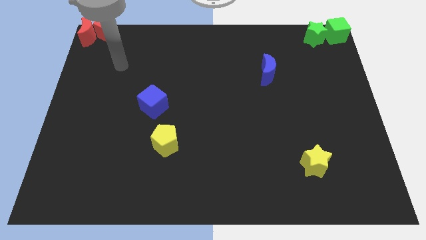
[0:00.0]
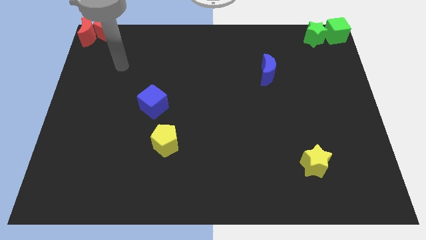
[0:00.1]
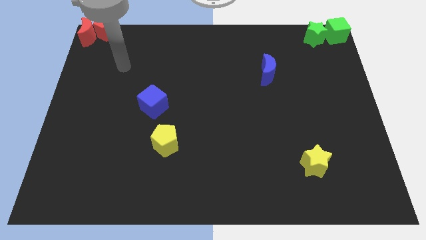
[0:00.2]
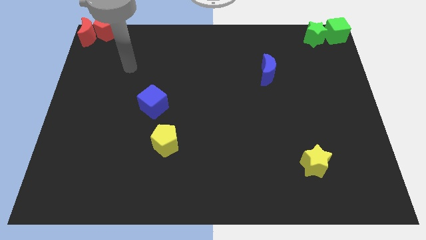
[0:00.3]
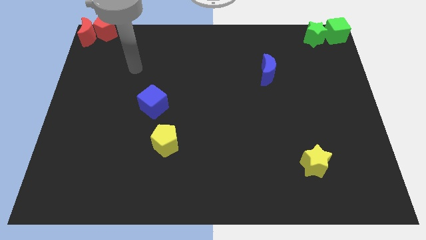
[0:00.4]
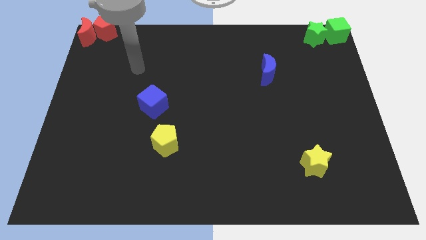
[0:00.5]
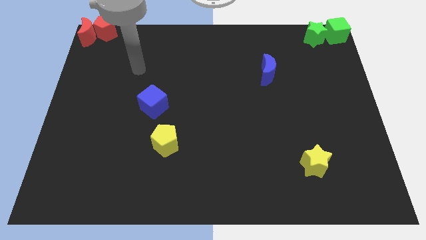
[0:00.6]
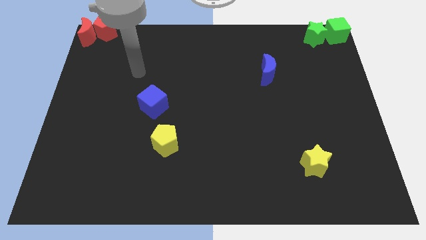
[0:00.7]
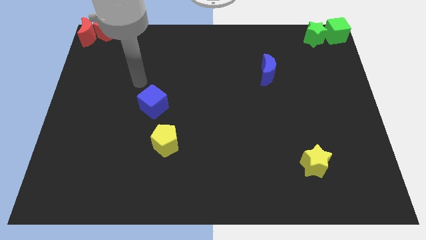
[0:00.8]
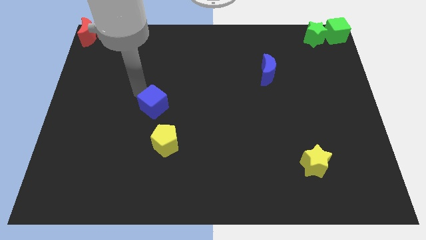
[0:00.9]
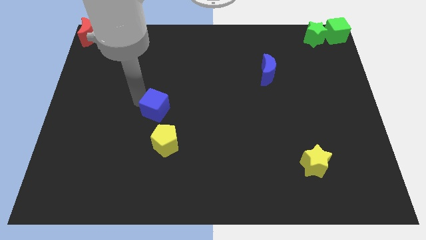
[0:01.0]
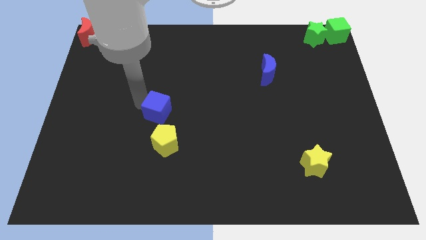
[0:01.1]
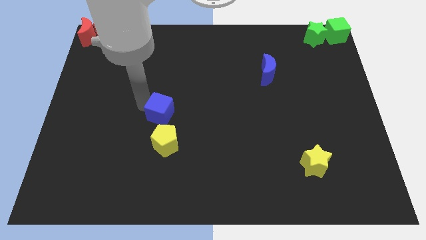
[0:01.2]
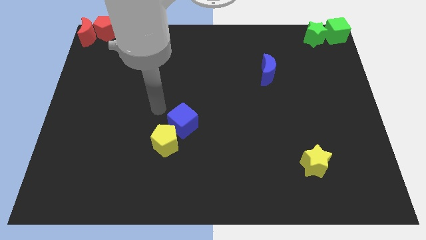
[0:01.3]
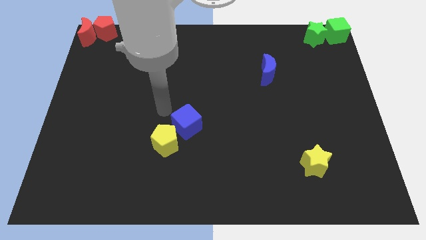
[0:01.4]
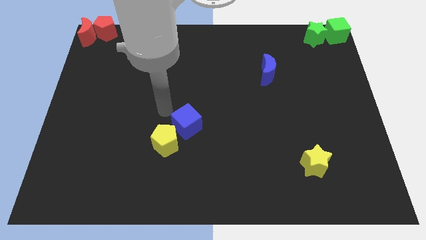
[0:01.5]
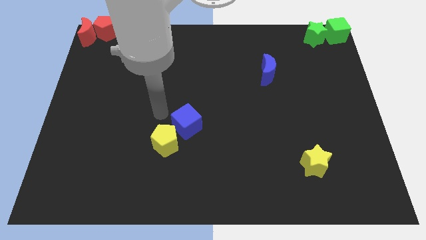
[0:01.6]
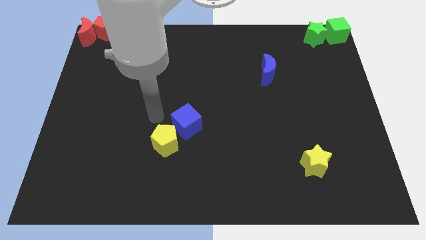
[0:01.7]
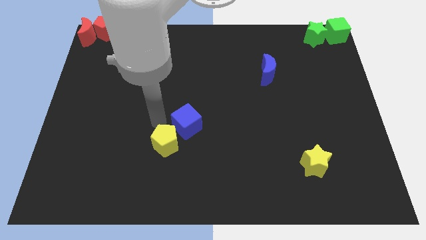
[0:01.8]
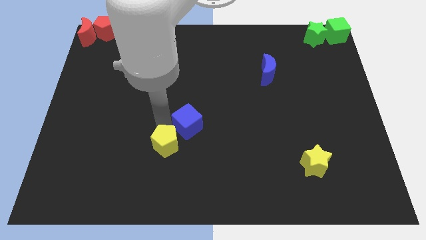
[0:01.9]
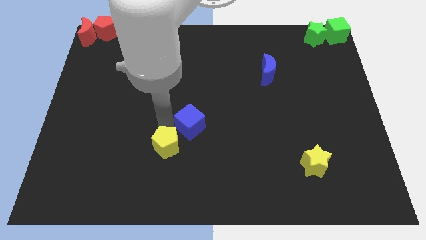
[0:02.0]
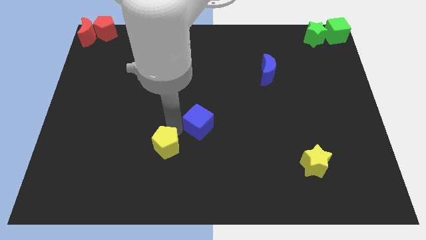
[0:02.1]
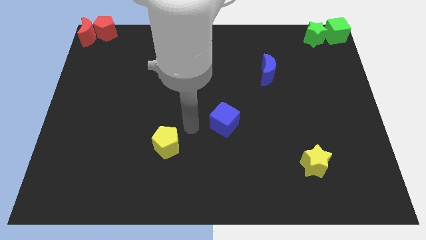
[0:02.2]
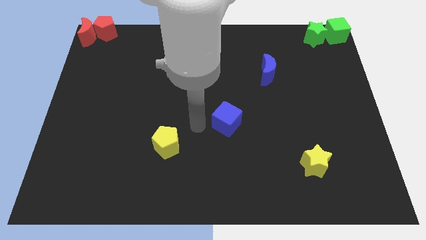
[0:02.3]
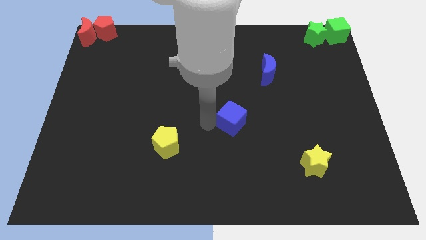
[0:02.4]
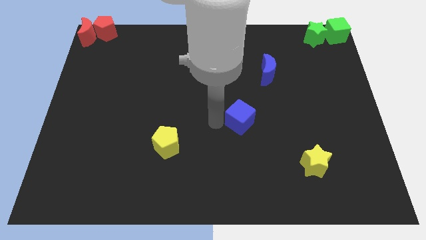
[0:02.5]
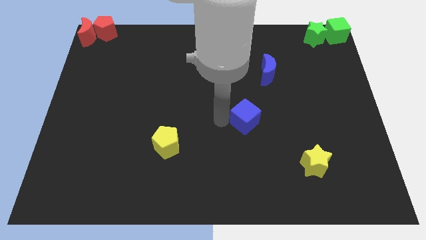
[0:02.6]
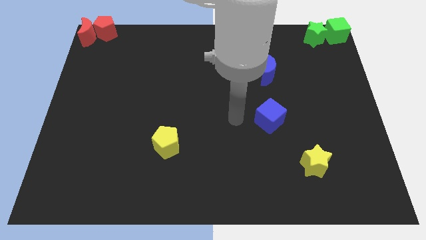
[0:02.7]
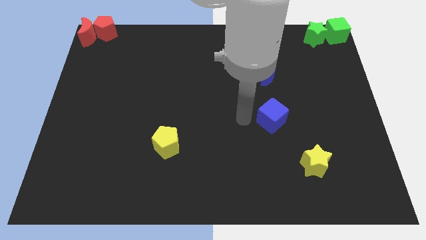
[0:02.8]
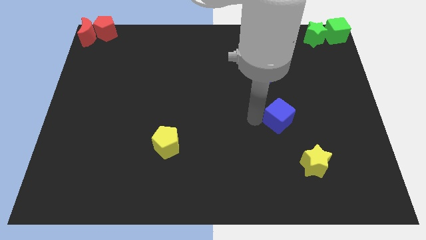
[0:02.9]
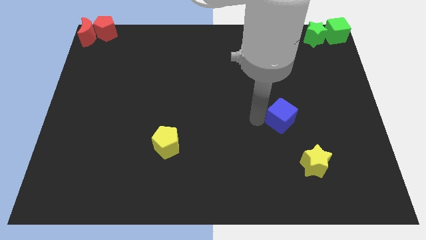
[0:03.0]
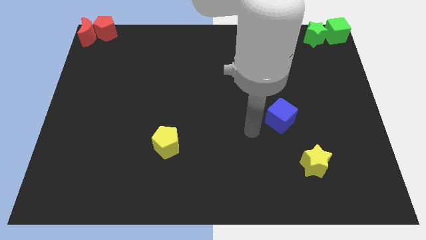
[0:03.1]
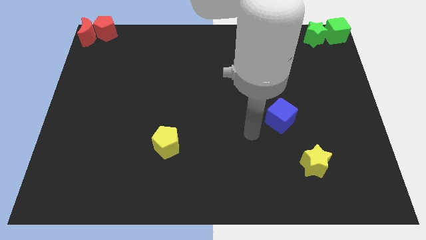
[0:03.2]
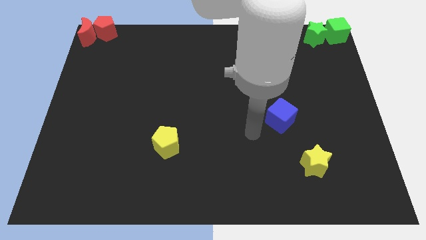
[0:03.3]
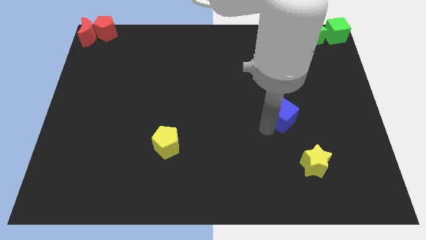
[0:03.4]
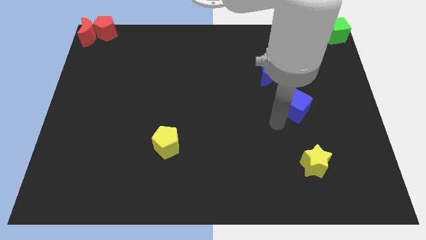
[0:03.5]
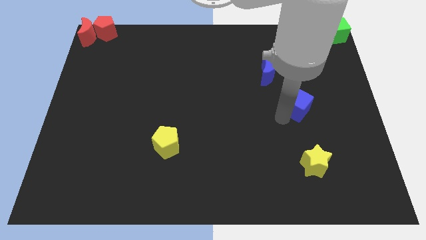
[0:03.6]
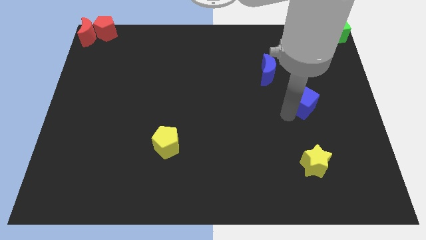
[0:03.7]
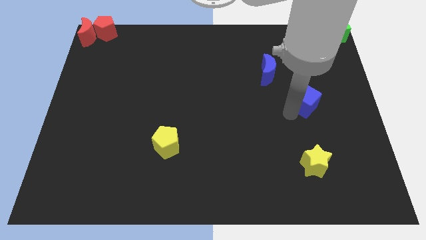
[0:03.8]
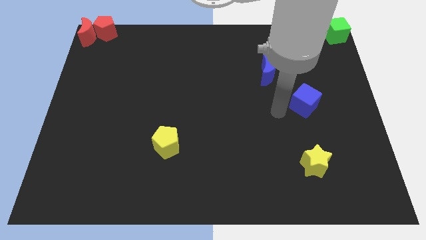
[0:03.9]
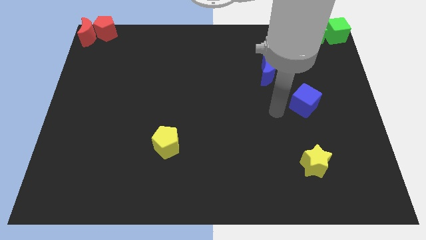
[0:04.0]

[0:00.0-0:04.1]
move the blue cube vertically to the top side of the yellow star

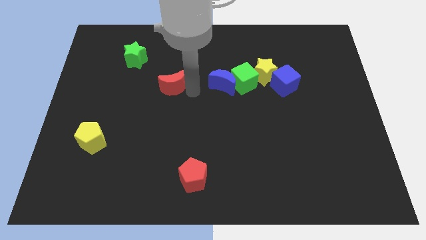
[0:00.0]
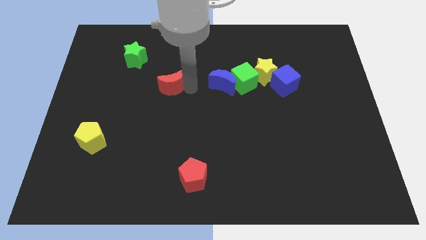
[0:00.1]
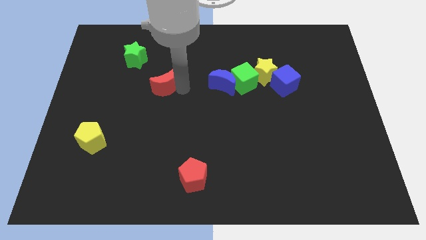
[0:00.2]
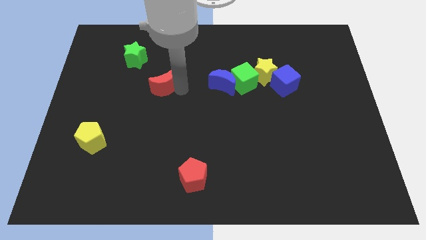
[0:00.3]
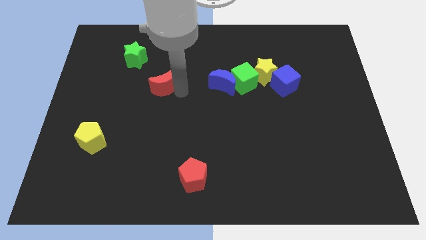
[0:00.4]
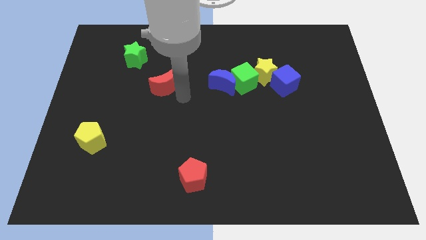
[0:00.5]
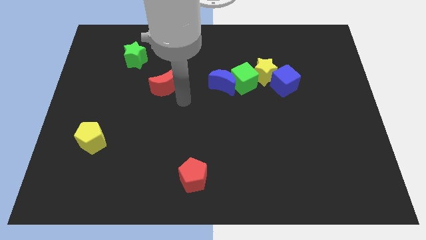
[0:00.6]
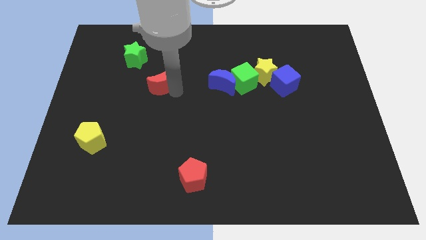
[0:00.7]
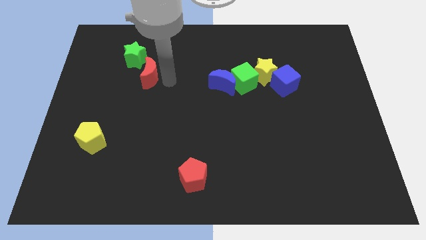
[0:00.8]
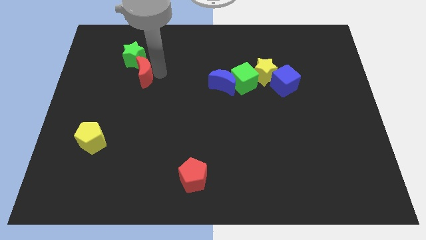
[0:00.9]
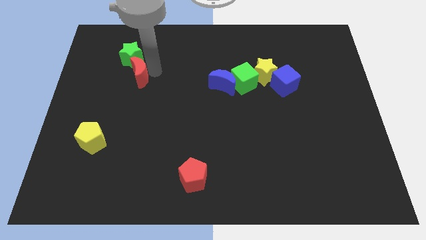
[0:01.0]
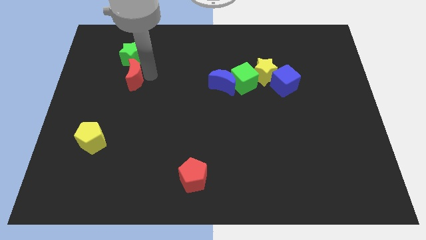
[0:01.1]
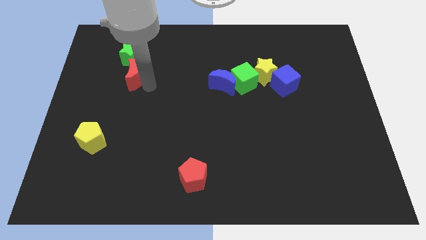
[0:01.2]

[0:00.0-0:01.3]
place red moon to the bottom of green star

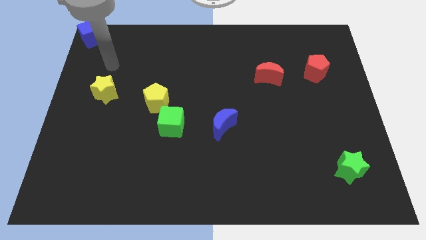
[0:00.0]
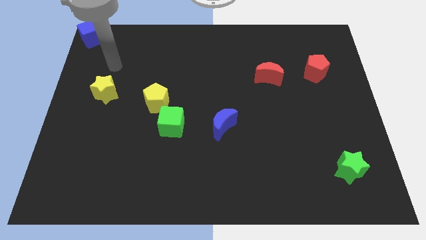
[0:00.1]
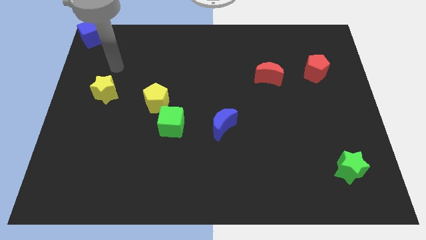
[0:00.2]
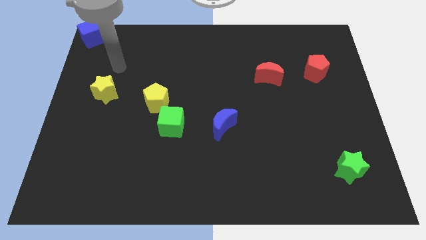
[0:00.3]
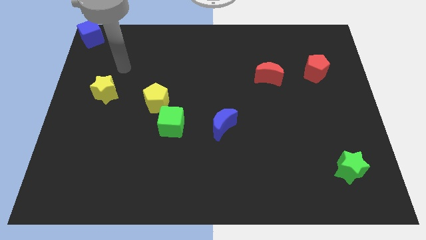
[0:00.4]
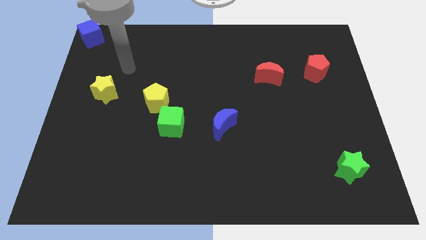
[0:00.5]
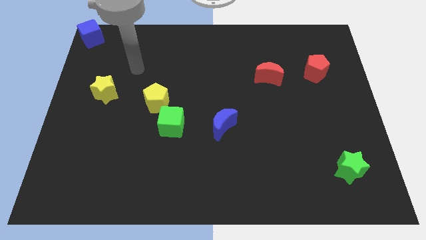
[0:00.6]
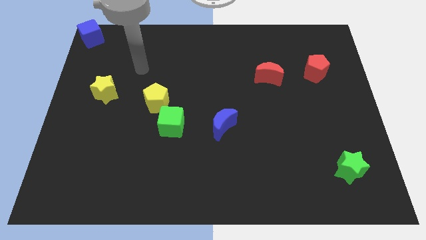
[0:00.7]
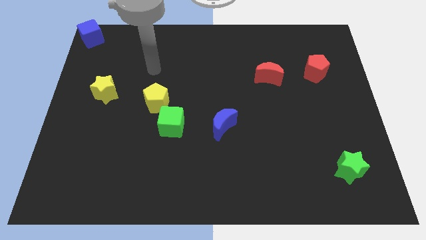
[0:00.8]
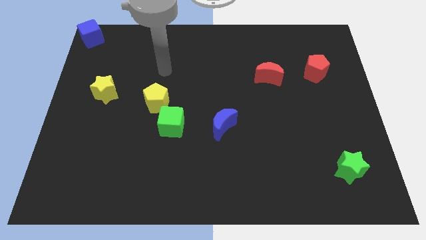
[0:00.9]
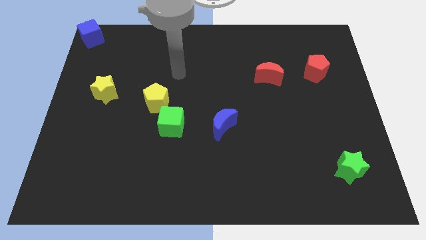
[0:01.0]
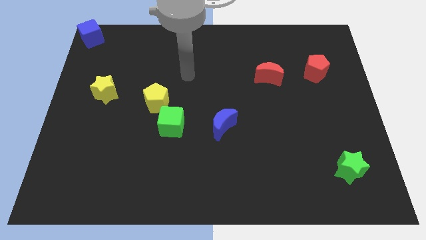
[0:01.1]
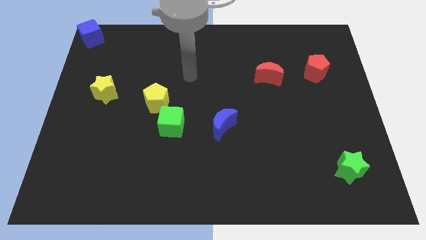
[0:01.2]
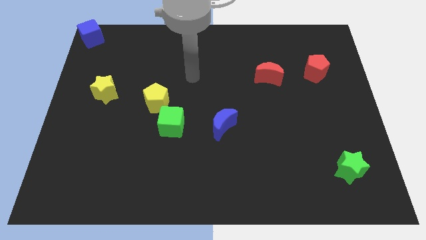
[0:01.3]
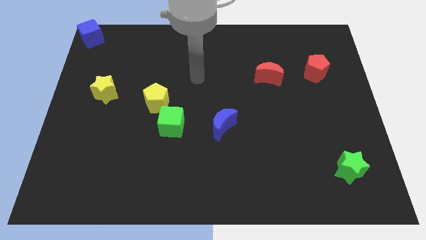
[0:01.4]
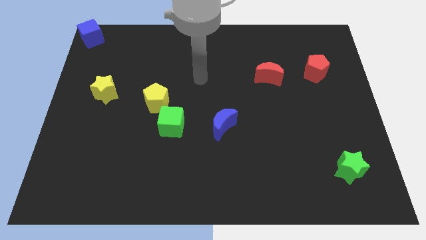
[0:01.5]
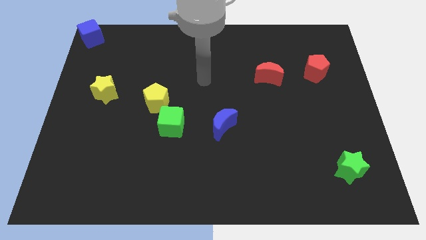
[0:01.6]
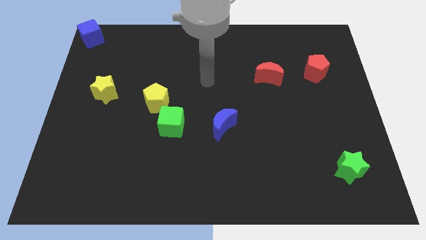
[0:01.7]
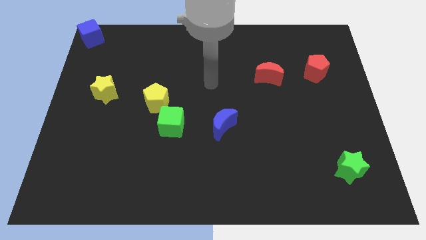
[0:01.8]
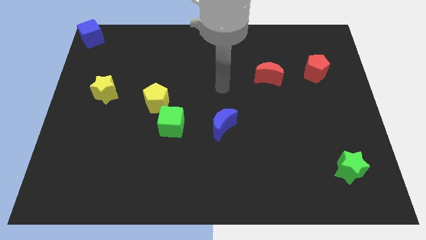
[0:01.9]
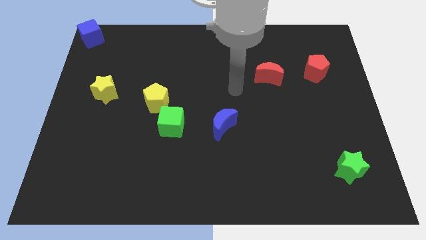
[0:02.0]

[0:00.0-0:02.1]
place your arm above the blue crescent

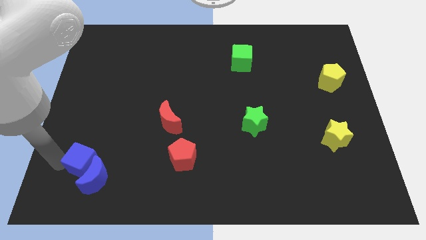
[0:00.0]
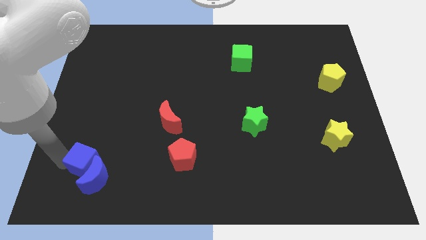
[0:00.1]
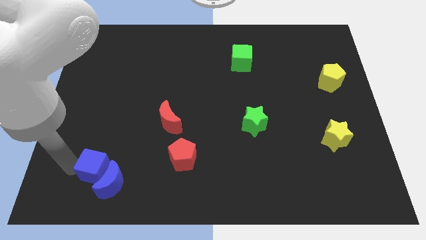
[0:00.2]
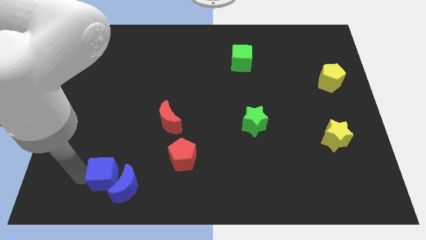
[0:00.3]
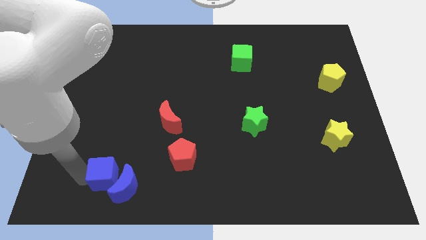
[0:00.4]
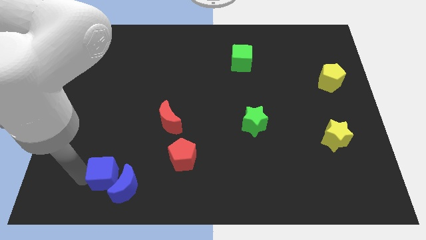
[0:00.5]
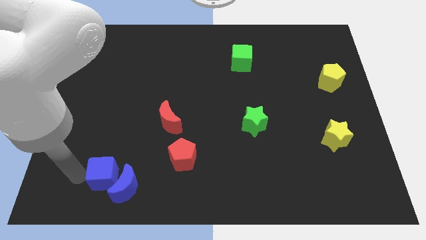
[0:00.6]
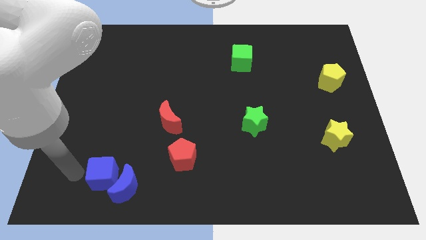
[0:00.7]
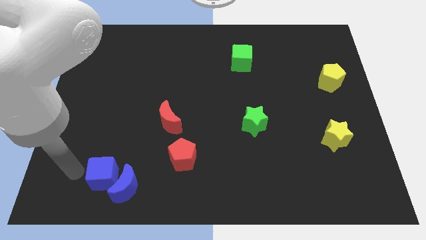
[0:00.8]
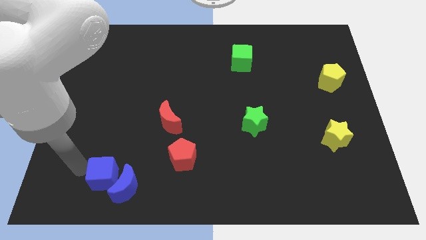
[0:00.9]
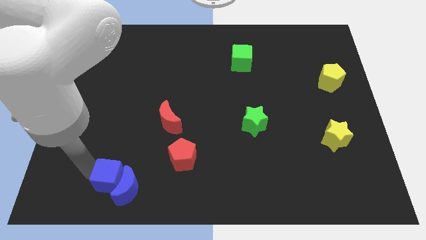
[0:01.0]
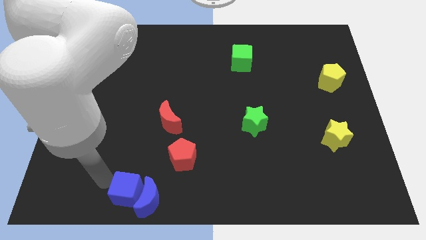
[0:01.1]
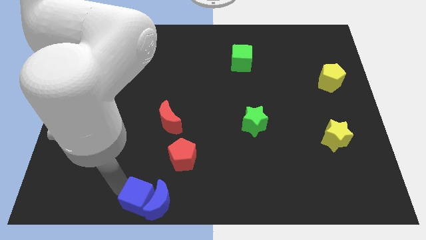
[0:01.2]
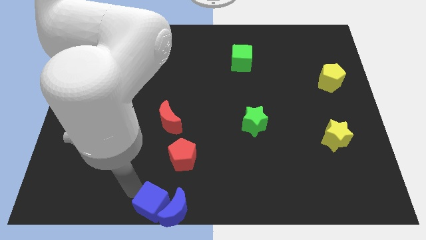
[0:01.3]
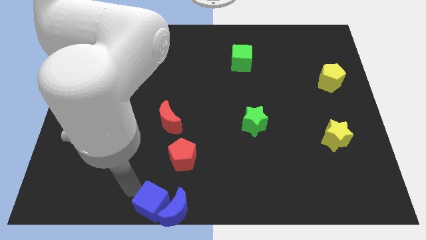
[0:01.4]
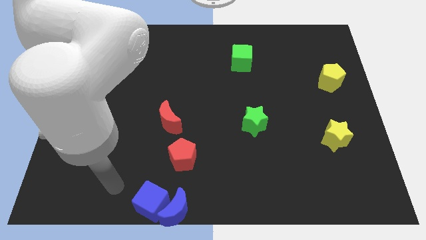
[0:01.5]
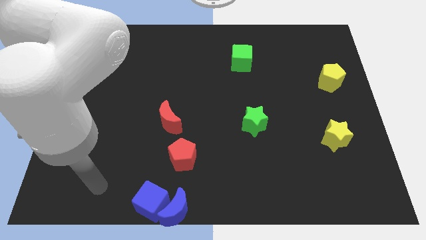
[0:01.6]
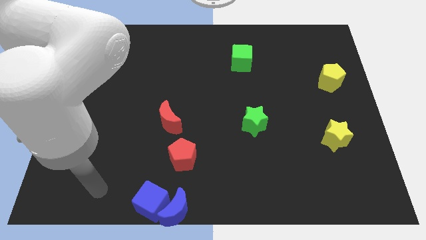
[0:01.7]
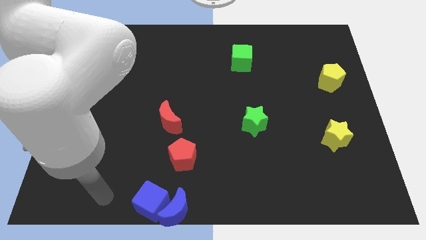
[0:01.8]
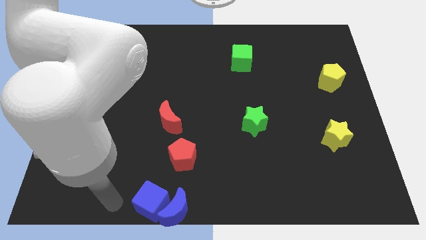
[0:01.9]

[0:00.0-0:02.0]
move the blue blocks towards center bottom
